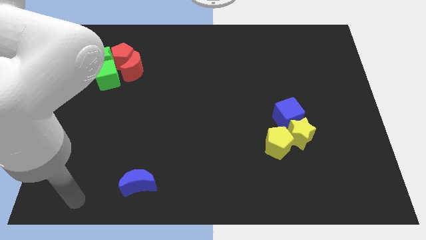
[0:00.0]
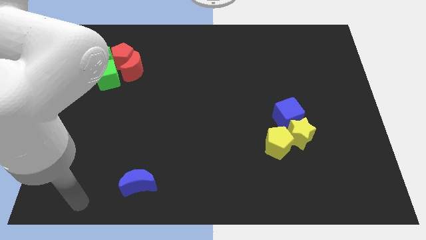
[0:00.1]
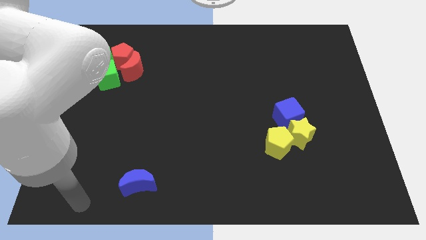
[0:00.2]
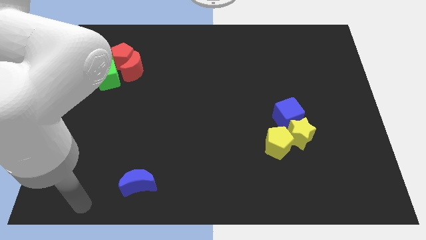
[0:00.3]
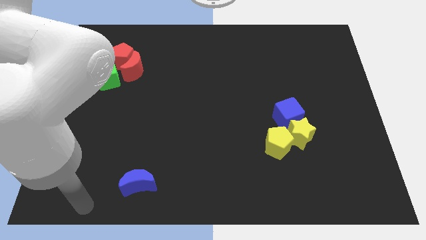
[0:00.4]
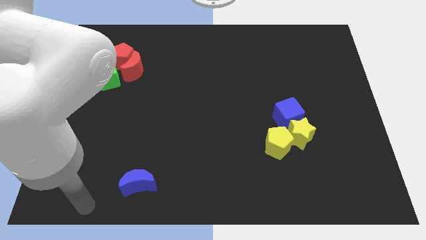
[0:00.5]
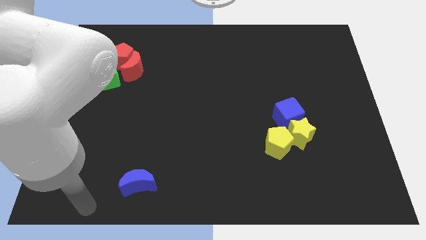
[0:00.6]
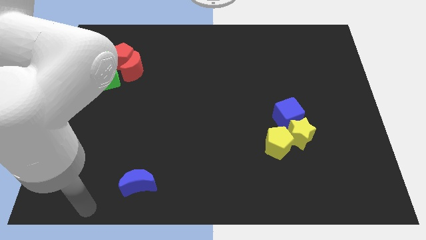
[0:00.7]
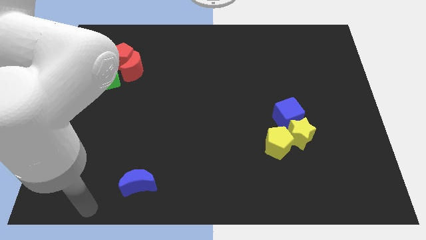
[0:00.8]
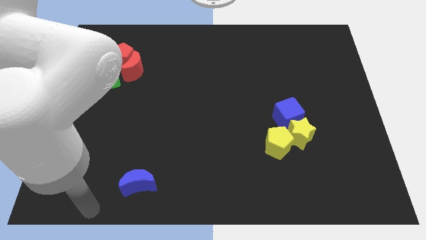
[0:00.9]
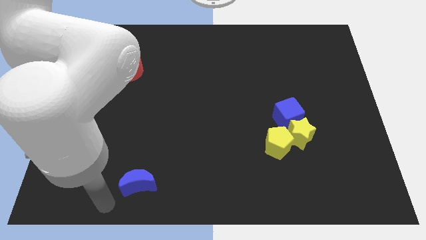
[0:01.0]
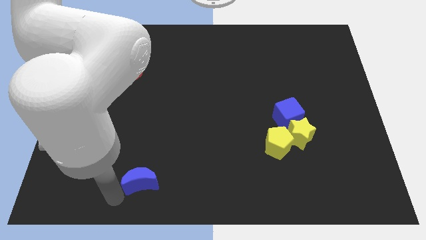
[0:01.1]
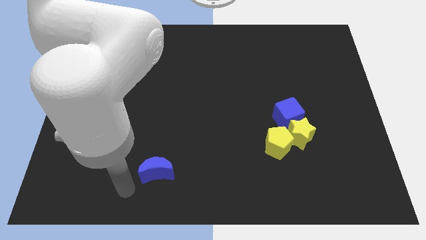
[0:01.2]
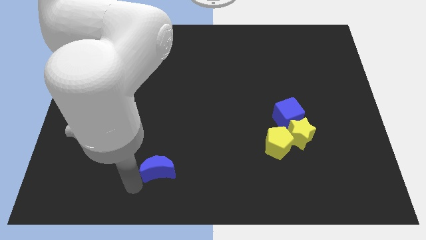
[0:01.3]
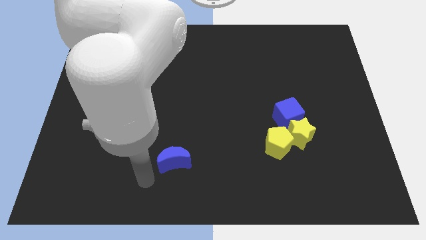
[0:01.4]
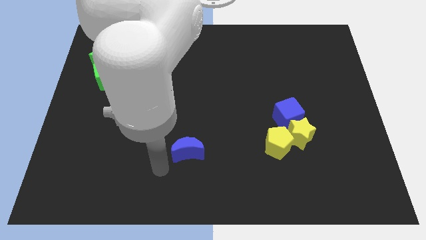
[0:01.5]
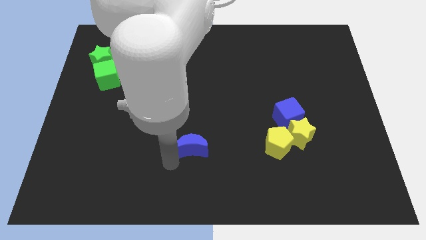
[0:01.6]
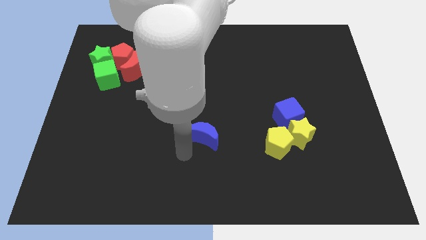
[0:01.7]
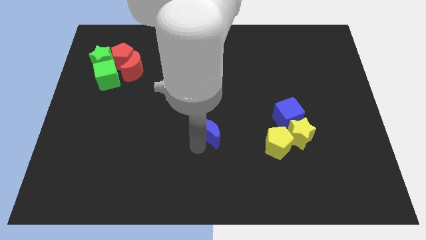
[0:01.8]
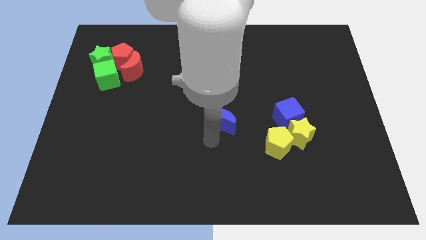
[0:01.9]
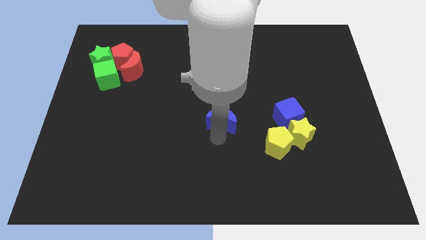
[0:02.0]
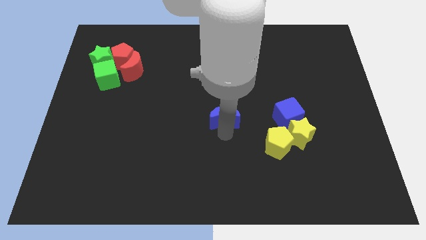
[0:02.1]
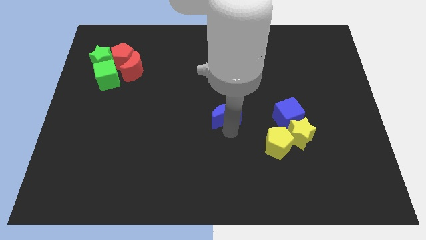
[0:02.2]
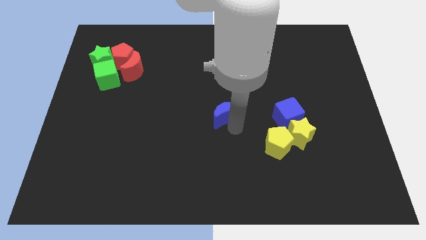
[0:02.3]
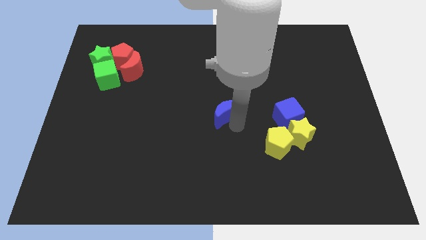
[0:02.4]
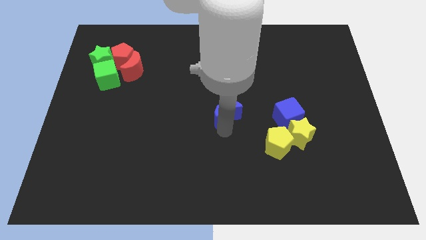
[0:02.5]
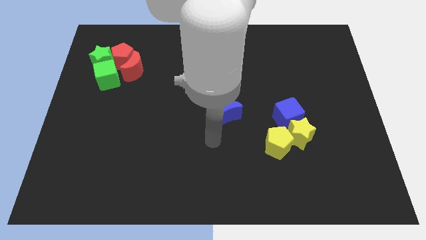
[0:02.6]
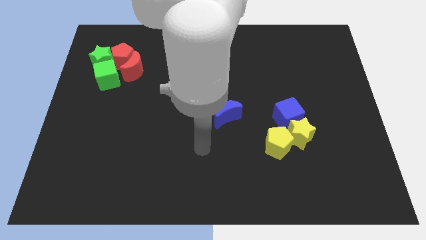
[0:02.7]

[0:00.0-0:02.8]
move the blue crescent to the left of the blue cube

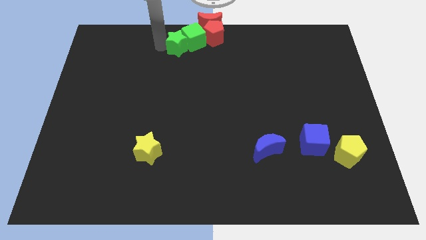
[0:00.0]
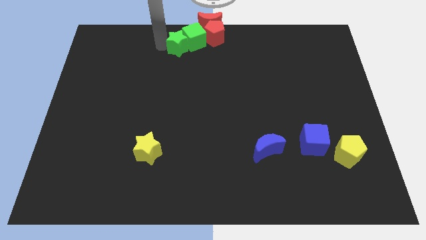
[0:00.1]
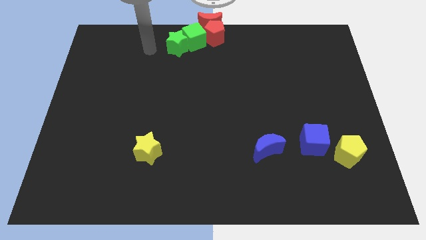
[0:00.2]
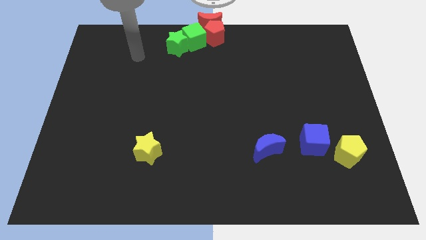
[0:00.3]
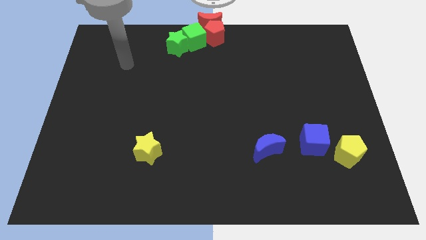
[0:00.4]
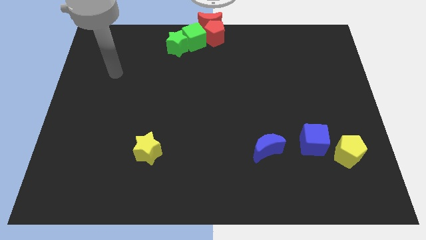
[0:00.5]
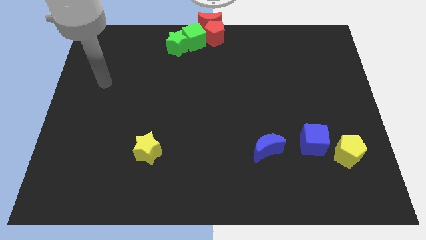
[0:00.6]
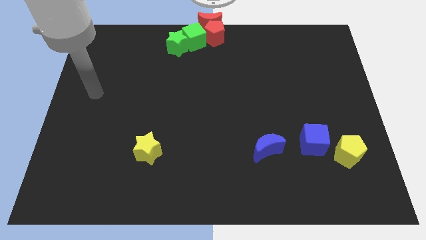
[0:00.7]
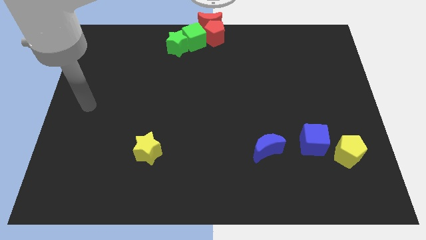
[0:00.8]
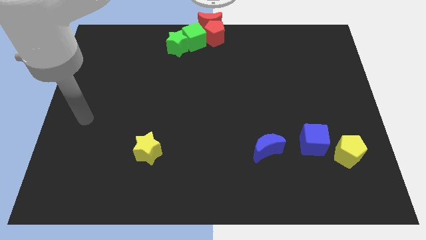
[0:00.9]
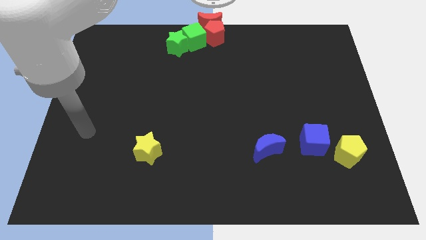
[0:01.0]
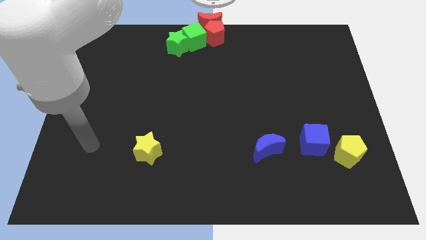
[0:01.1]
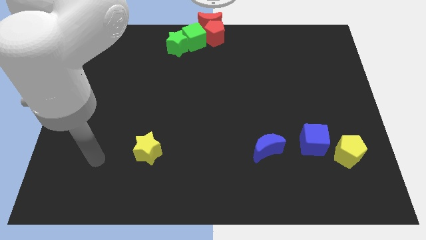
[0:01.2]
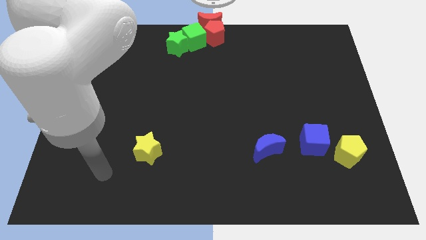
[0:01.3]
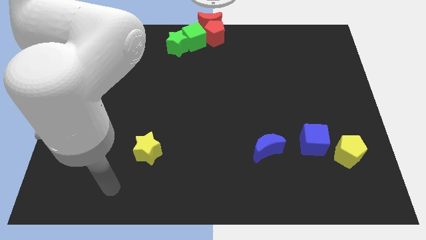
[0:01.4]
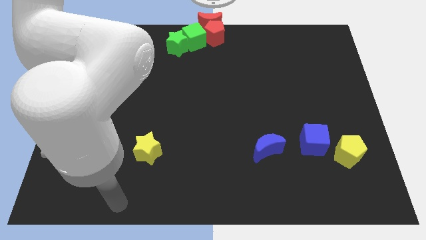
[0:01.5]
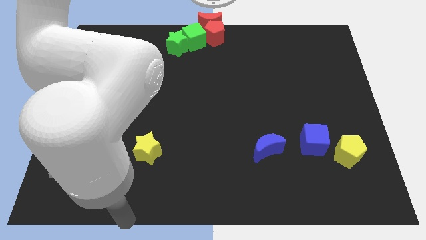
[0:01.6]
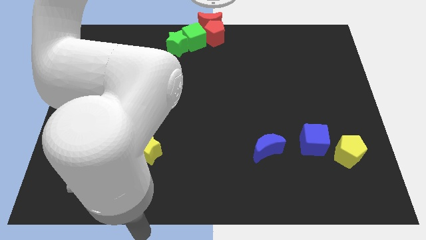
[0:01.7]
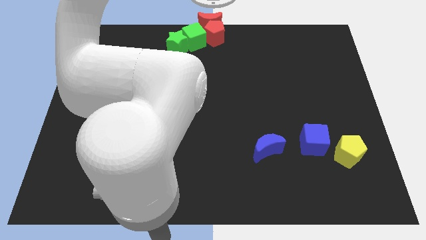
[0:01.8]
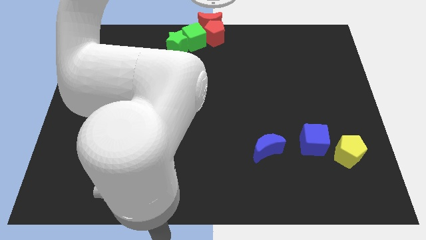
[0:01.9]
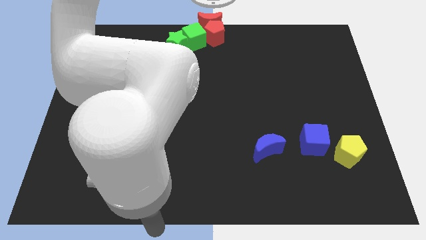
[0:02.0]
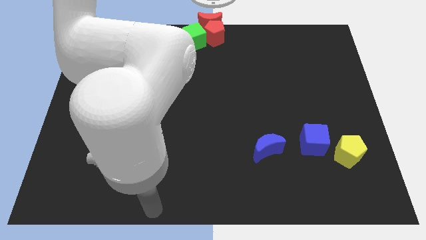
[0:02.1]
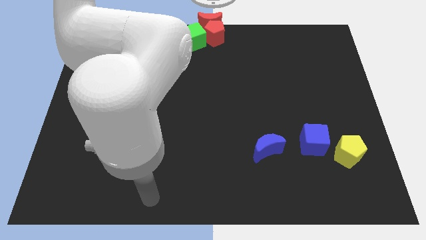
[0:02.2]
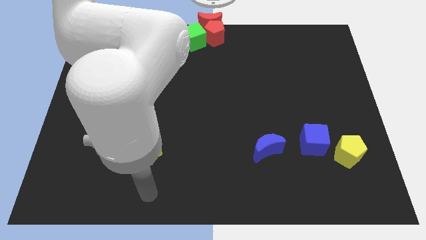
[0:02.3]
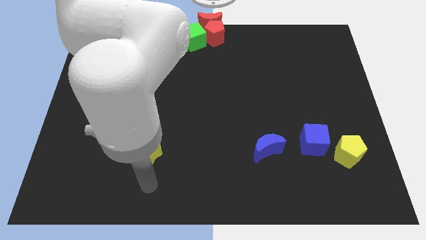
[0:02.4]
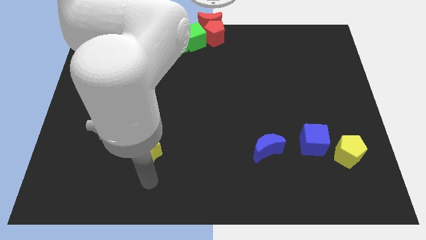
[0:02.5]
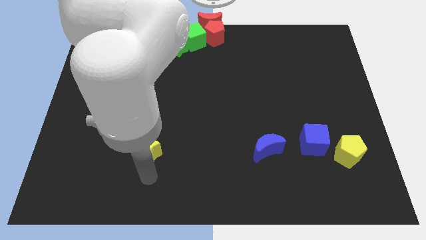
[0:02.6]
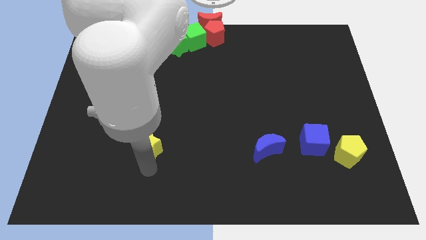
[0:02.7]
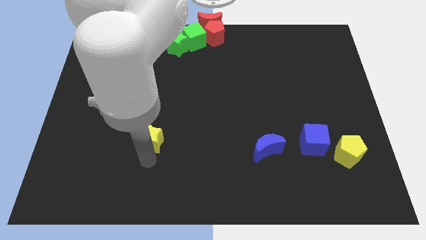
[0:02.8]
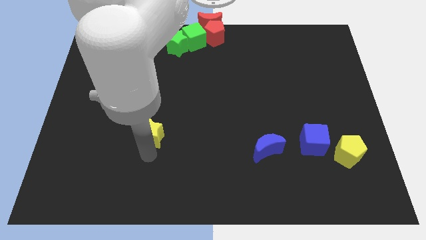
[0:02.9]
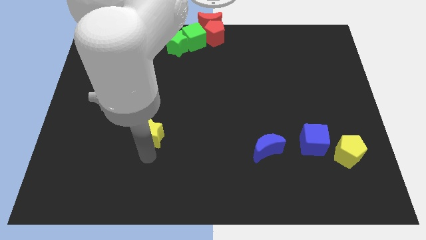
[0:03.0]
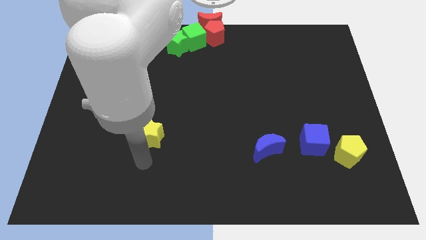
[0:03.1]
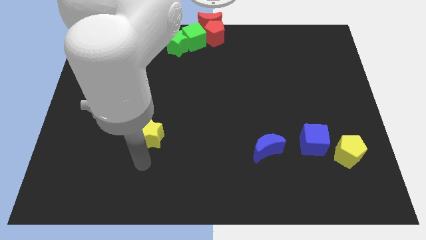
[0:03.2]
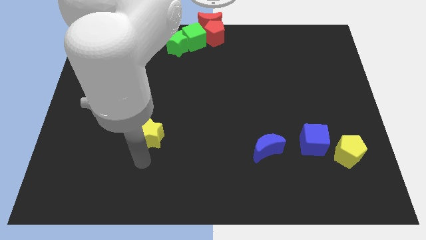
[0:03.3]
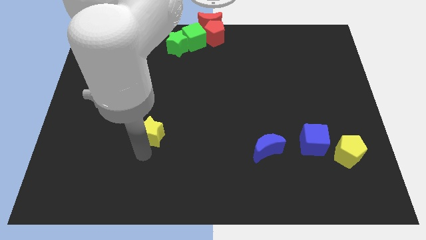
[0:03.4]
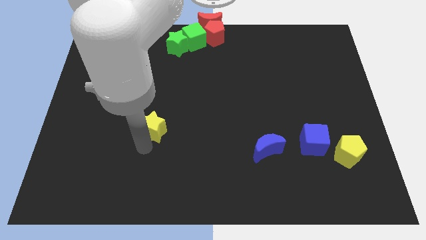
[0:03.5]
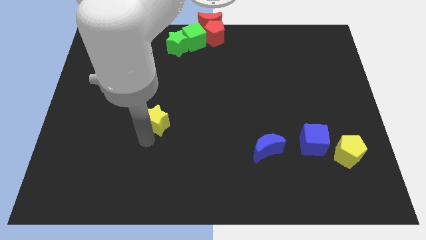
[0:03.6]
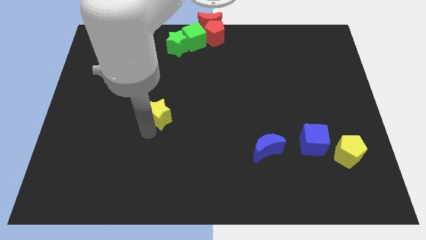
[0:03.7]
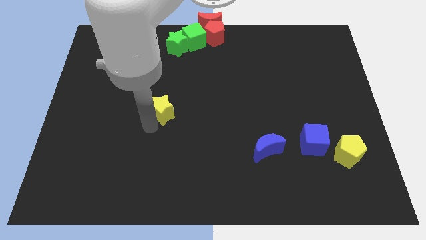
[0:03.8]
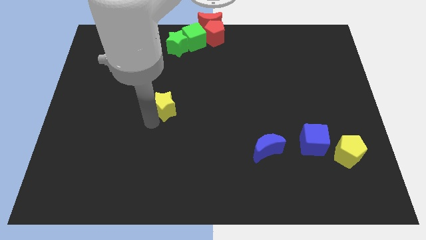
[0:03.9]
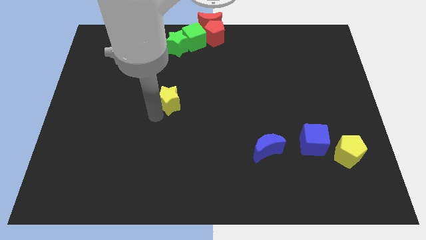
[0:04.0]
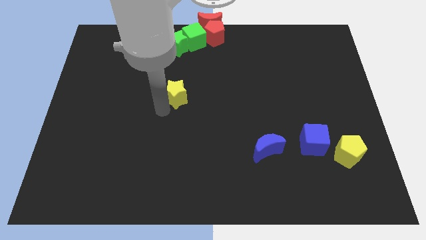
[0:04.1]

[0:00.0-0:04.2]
move the yellow star towards the bottom side of the group of blocks

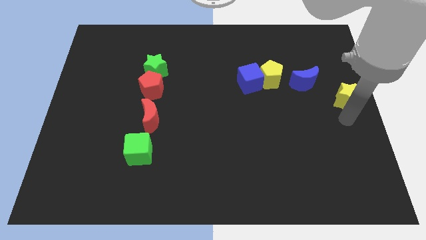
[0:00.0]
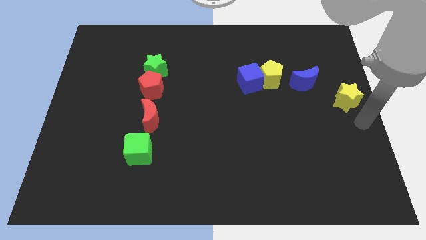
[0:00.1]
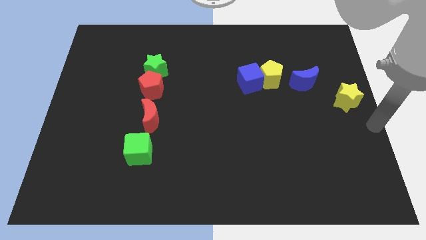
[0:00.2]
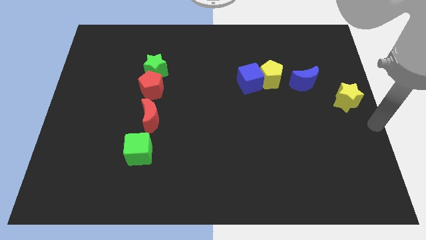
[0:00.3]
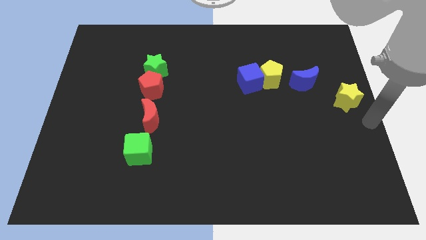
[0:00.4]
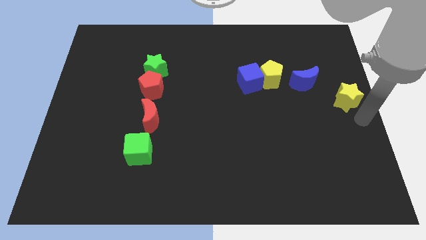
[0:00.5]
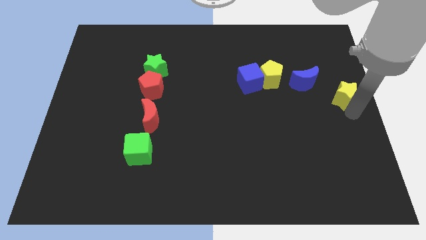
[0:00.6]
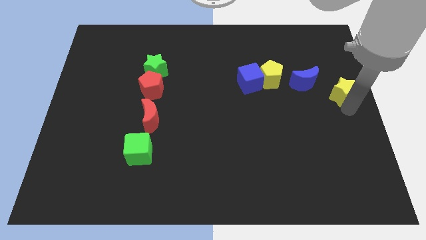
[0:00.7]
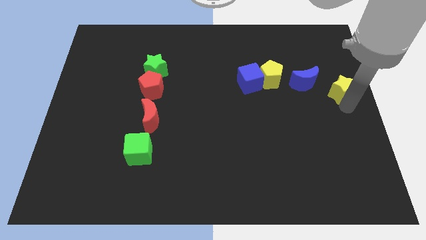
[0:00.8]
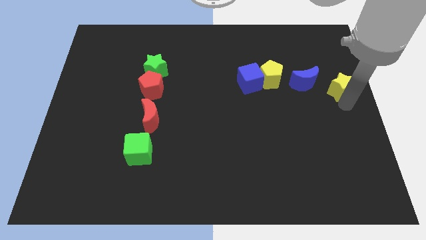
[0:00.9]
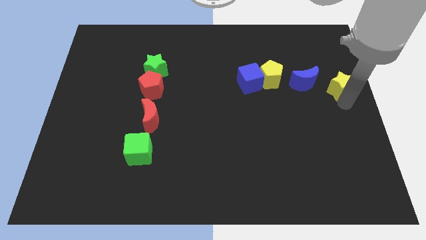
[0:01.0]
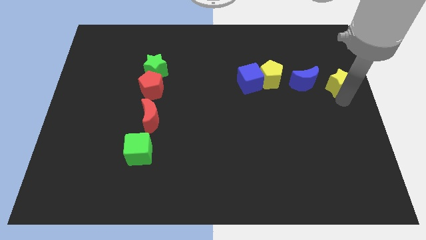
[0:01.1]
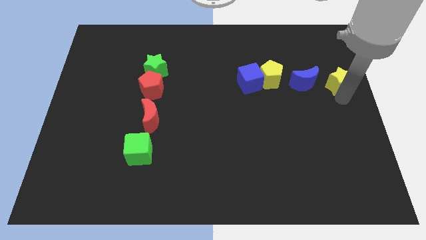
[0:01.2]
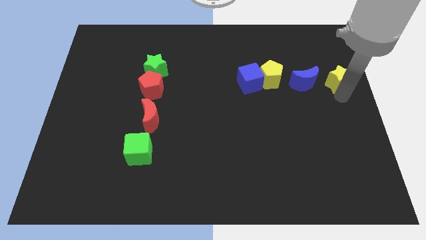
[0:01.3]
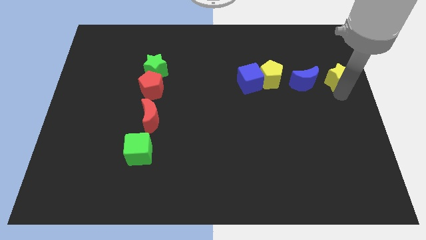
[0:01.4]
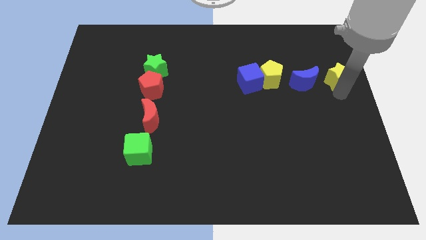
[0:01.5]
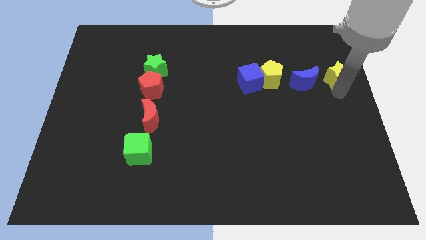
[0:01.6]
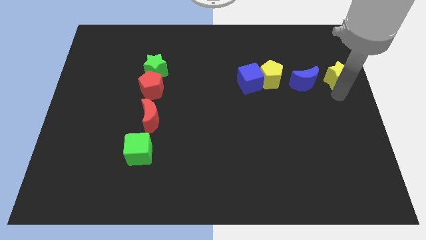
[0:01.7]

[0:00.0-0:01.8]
place yellow star right to the blue moon

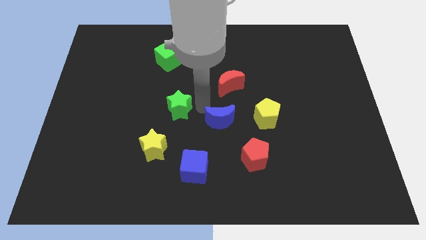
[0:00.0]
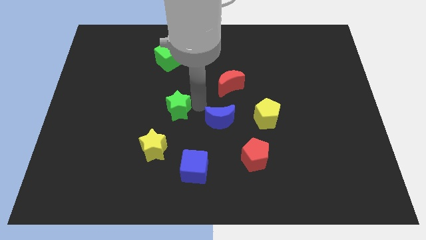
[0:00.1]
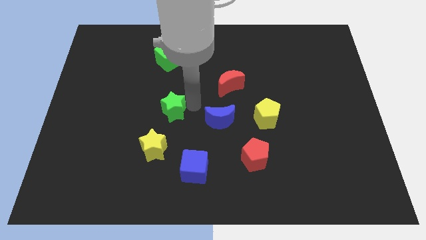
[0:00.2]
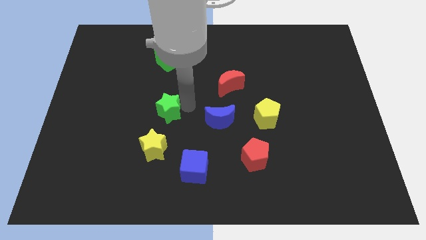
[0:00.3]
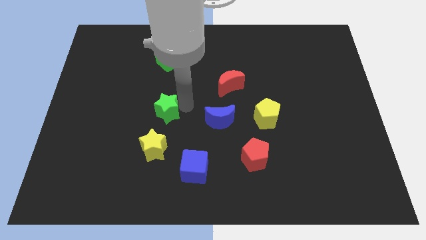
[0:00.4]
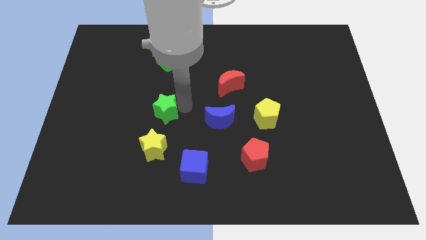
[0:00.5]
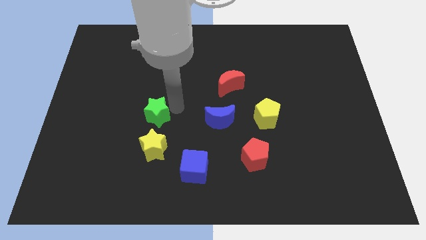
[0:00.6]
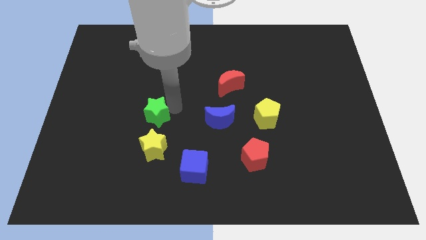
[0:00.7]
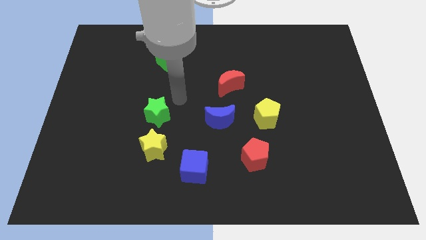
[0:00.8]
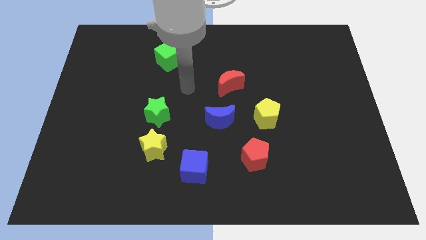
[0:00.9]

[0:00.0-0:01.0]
push the green star towards the top of the yellow star
